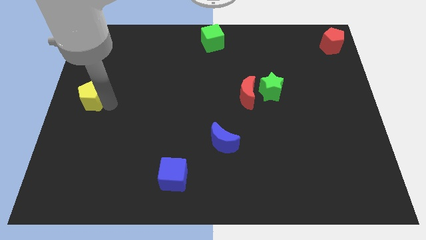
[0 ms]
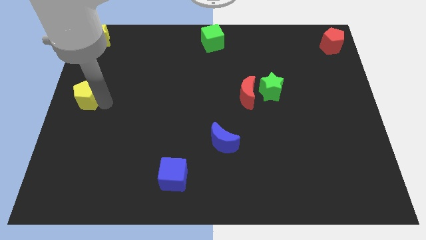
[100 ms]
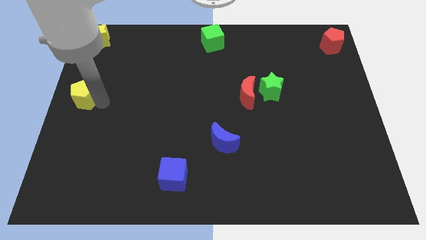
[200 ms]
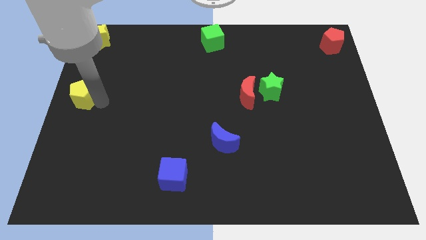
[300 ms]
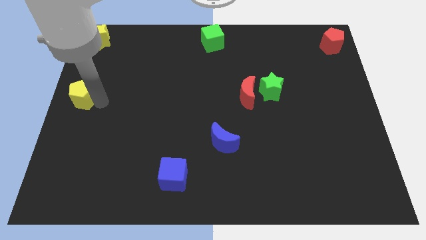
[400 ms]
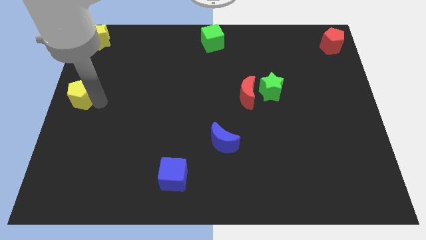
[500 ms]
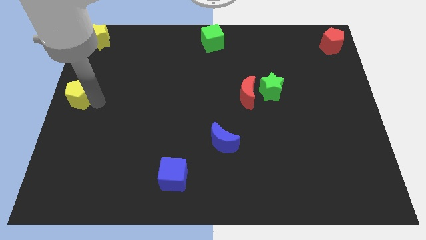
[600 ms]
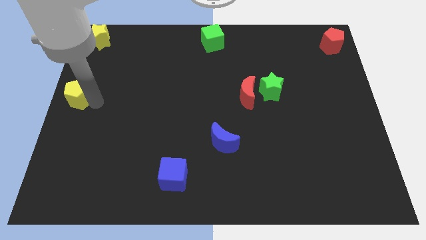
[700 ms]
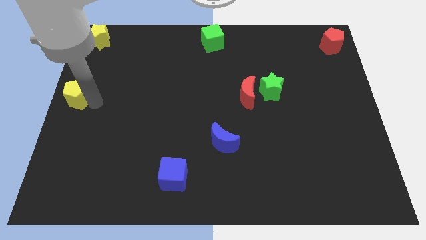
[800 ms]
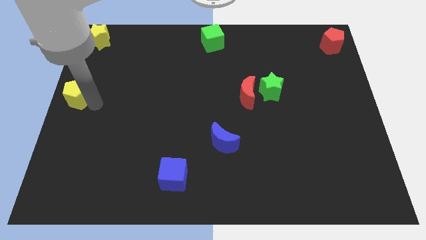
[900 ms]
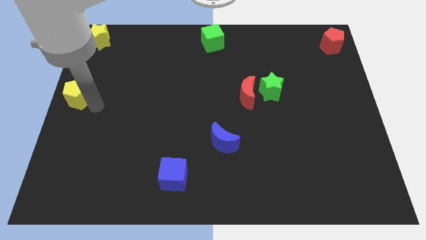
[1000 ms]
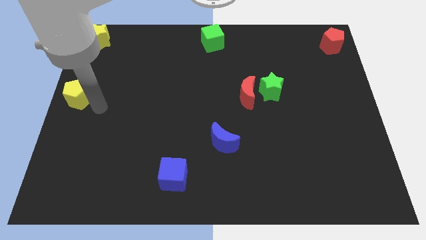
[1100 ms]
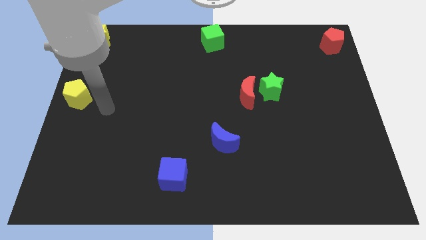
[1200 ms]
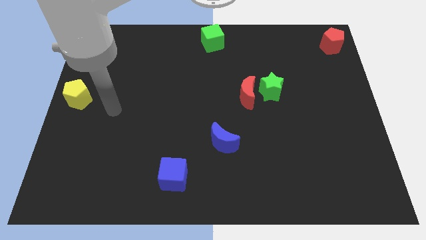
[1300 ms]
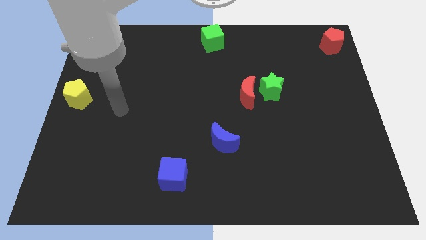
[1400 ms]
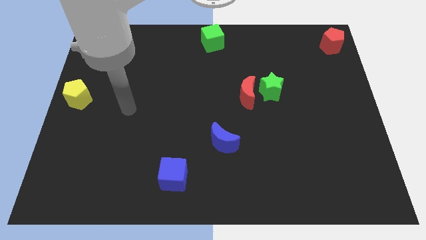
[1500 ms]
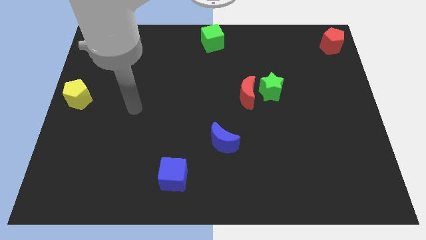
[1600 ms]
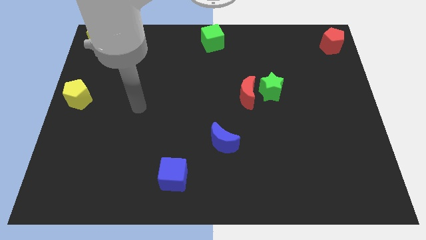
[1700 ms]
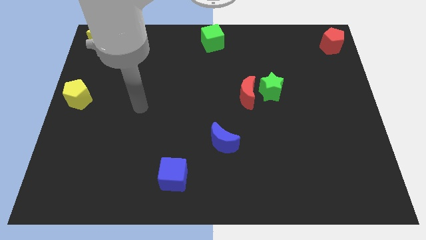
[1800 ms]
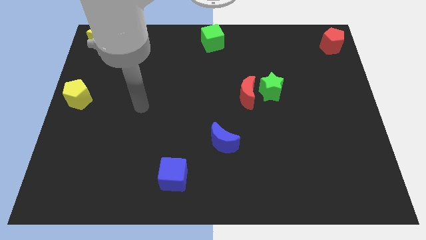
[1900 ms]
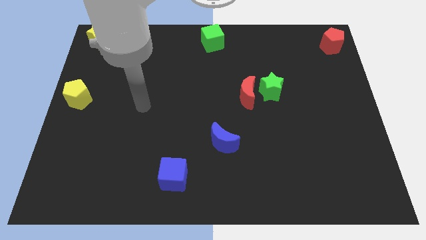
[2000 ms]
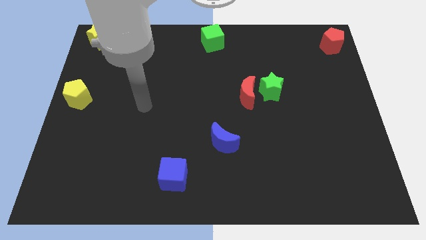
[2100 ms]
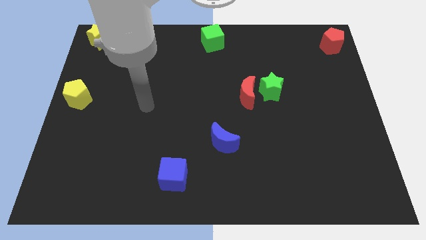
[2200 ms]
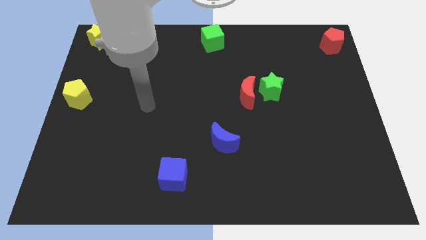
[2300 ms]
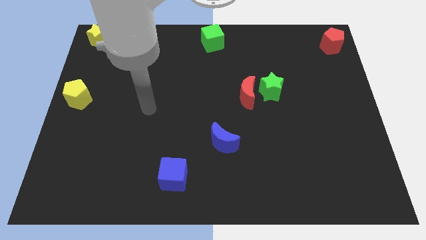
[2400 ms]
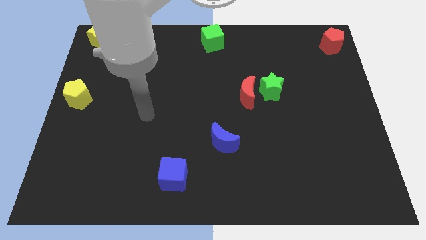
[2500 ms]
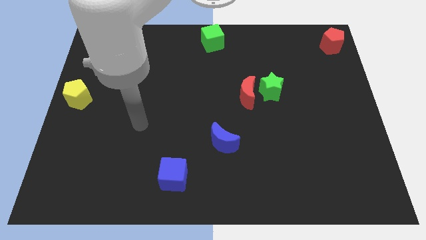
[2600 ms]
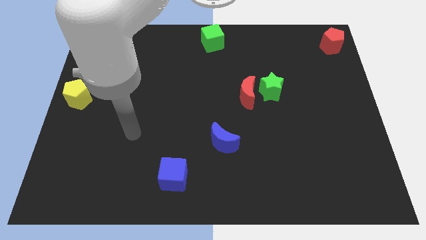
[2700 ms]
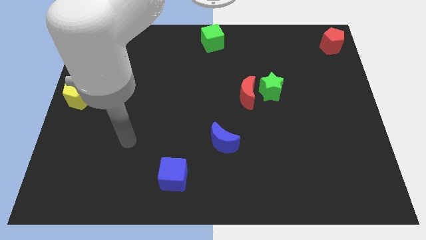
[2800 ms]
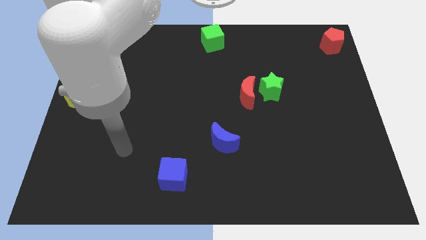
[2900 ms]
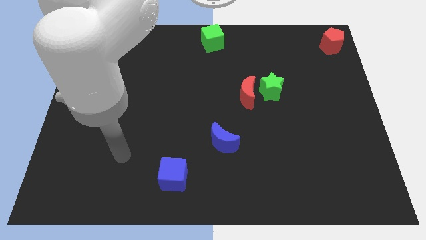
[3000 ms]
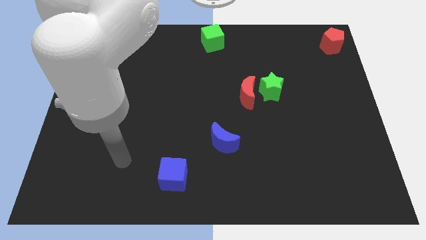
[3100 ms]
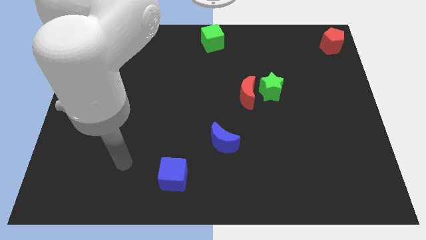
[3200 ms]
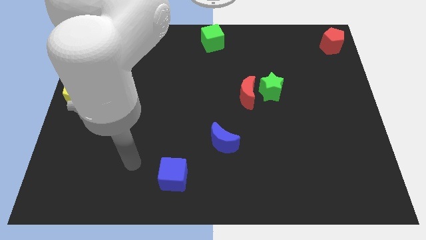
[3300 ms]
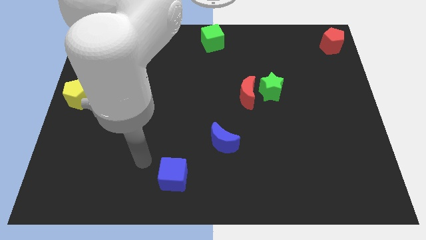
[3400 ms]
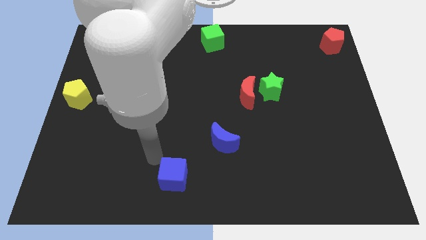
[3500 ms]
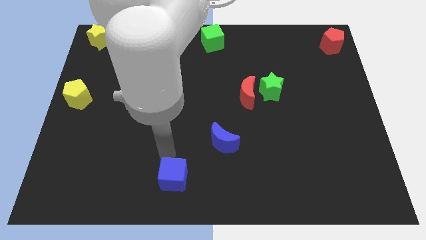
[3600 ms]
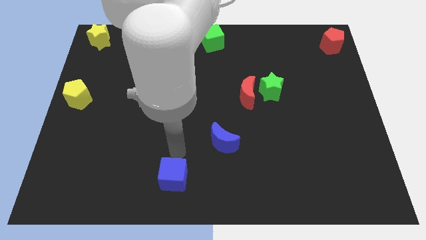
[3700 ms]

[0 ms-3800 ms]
move your arm to the top of blue cube

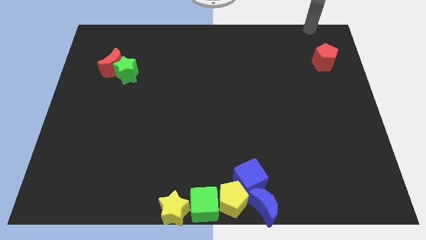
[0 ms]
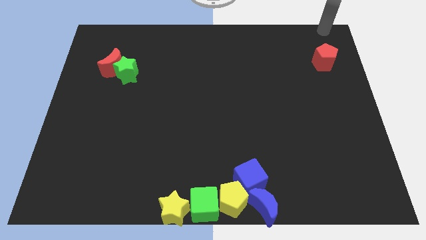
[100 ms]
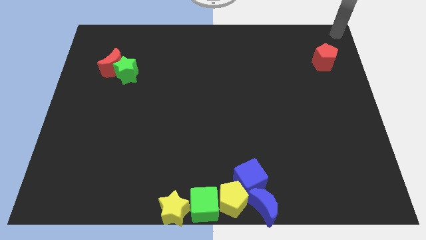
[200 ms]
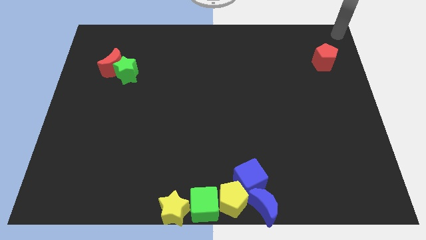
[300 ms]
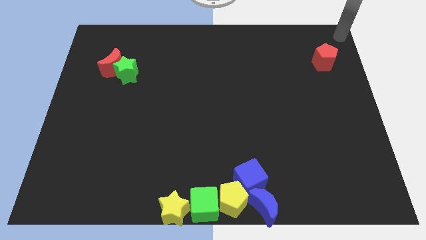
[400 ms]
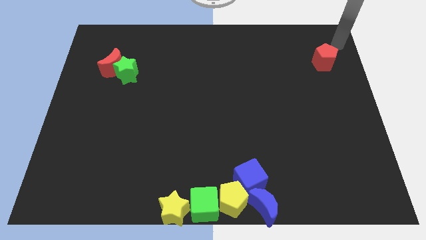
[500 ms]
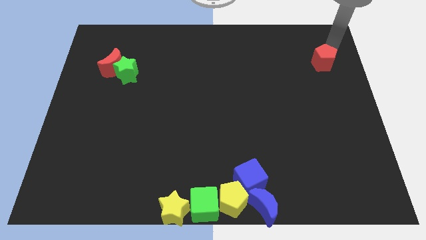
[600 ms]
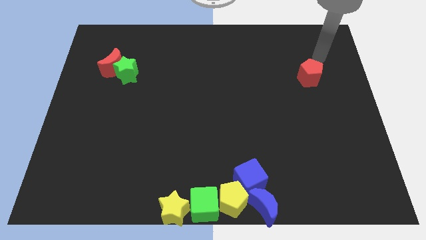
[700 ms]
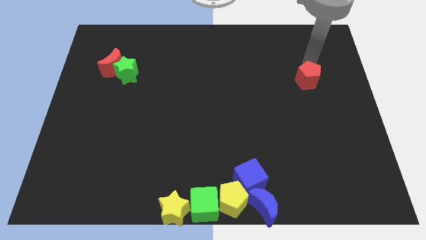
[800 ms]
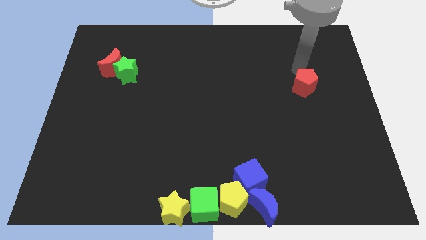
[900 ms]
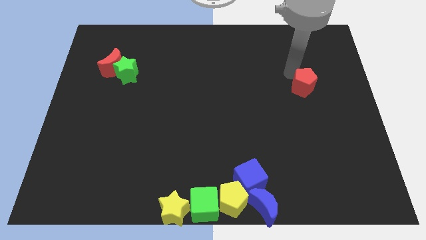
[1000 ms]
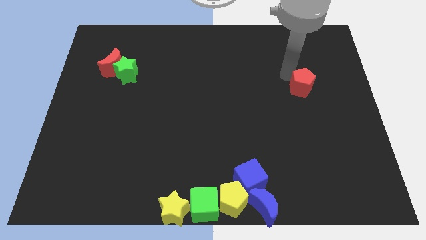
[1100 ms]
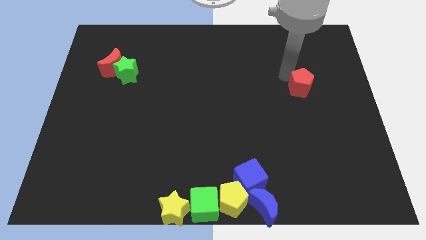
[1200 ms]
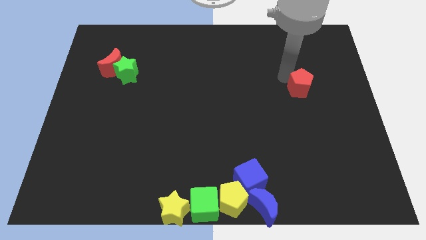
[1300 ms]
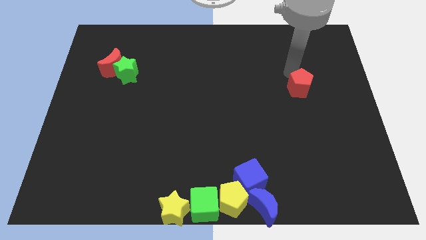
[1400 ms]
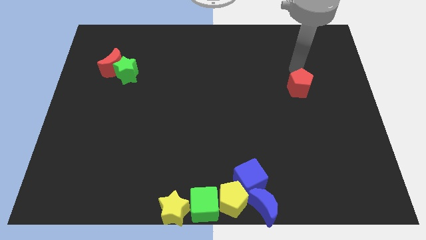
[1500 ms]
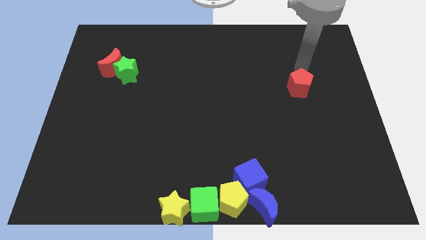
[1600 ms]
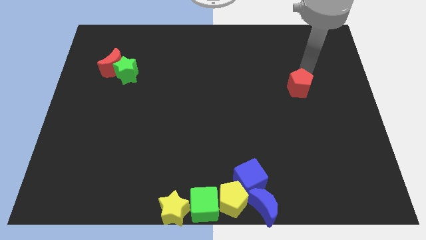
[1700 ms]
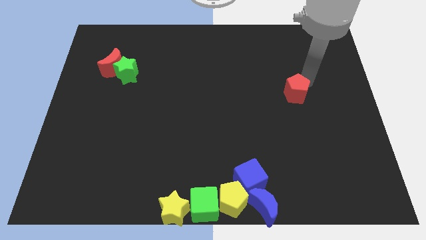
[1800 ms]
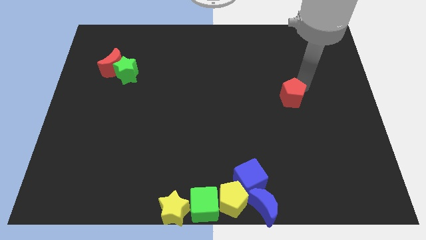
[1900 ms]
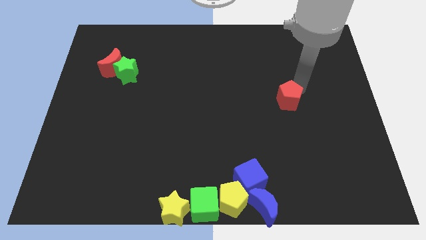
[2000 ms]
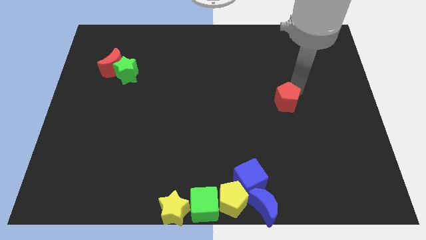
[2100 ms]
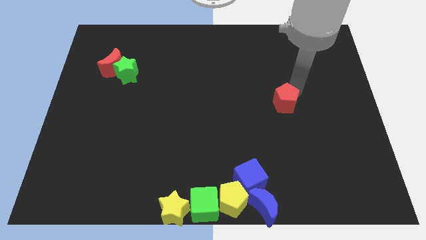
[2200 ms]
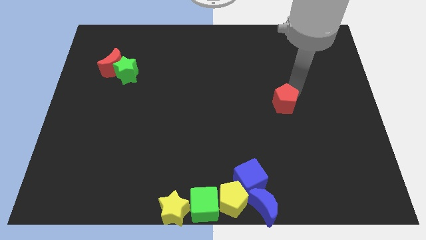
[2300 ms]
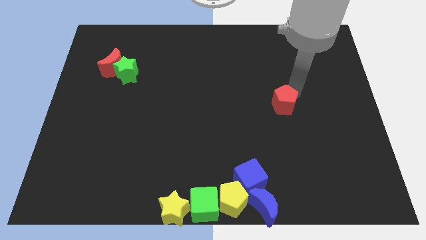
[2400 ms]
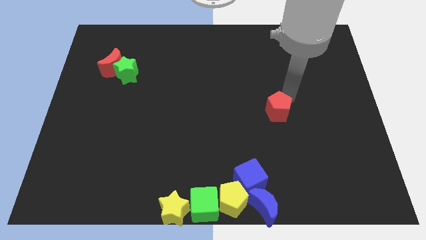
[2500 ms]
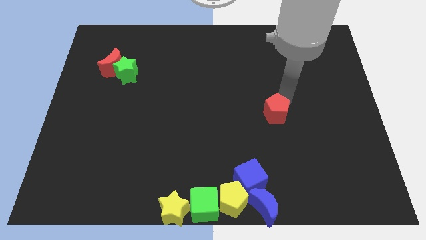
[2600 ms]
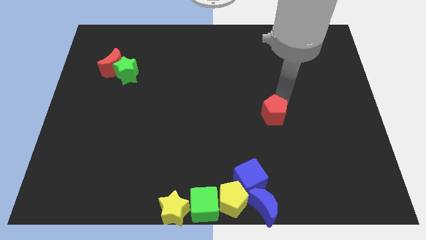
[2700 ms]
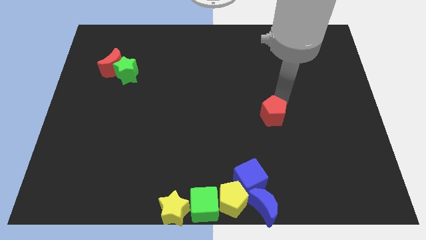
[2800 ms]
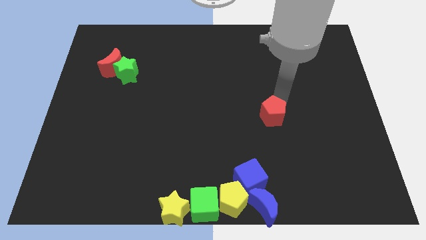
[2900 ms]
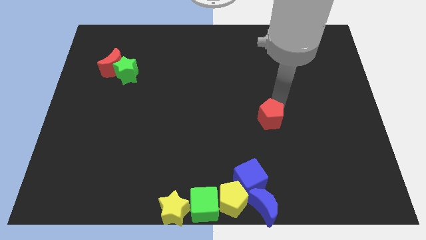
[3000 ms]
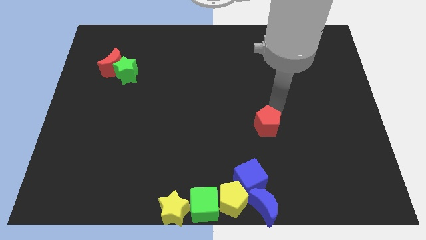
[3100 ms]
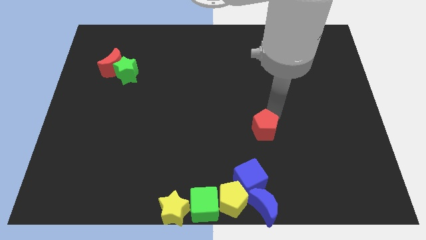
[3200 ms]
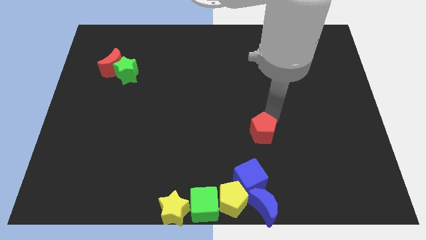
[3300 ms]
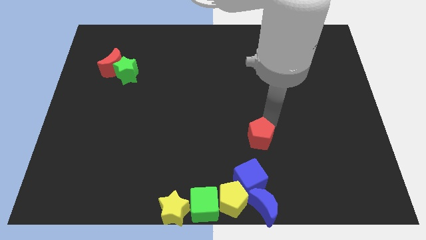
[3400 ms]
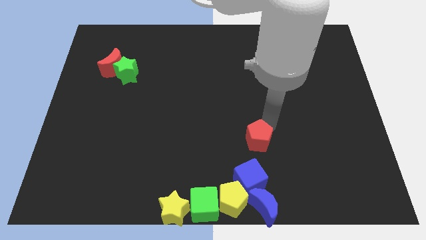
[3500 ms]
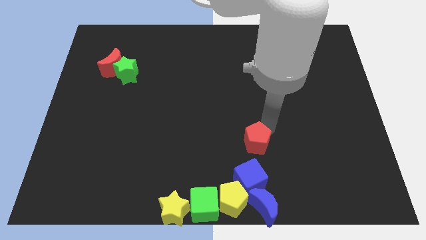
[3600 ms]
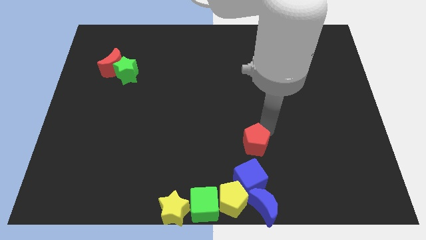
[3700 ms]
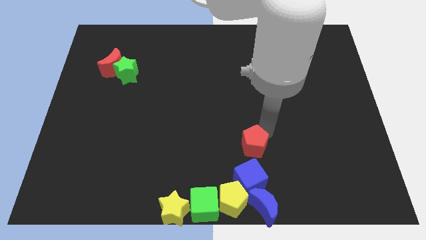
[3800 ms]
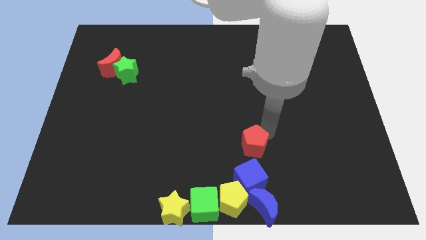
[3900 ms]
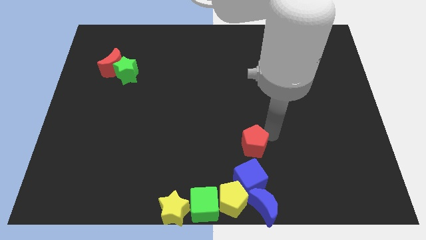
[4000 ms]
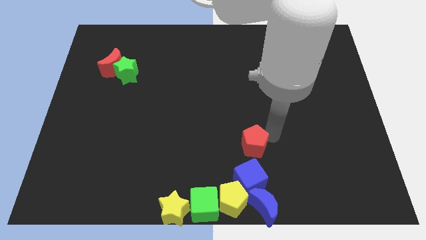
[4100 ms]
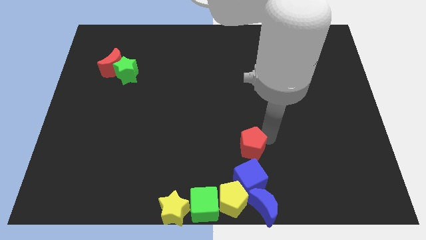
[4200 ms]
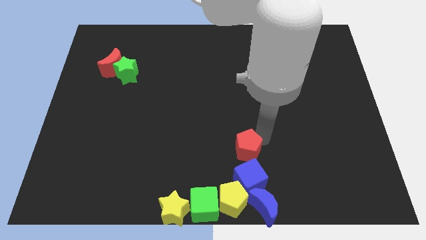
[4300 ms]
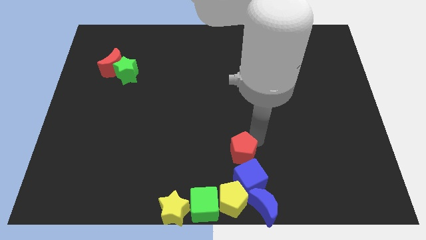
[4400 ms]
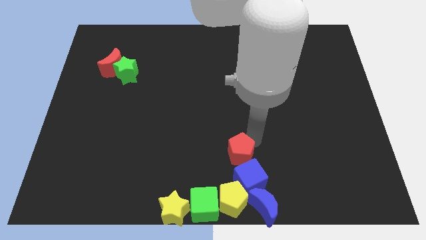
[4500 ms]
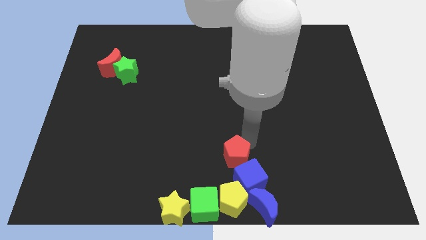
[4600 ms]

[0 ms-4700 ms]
move red pentagon towards the blue cube

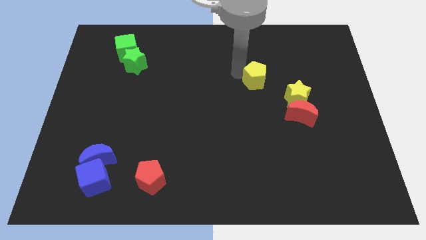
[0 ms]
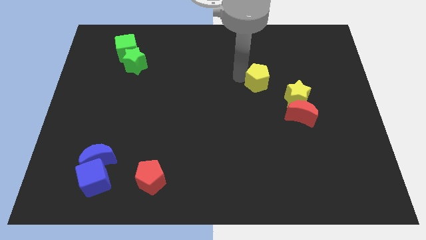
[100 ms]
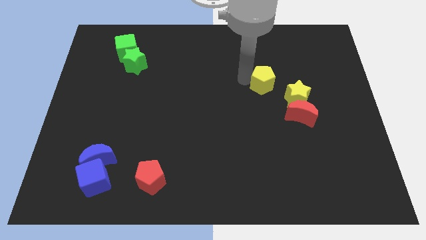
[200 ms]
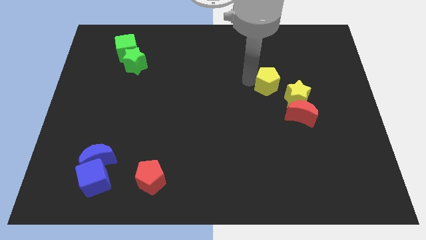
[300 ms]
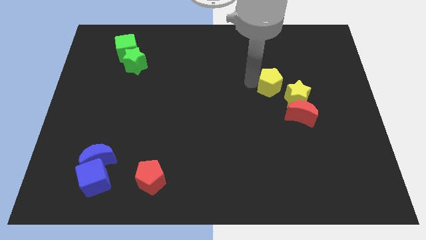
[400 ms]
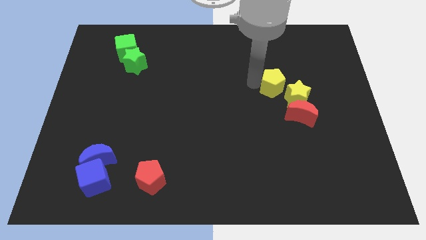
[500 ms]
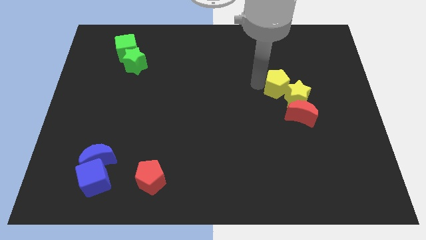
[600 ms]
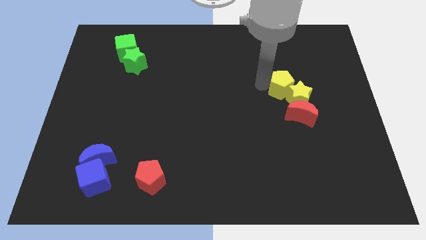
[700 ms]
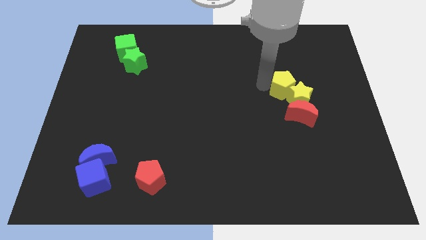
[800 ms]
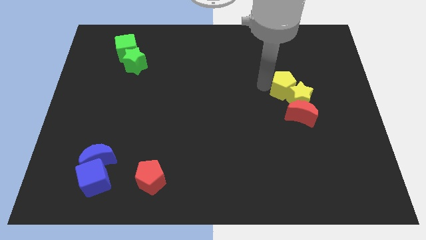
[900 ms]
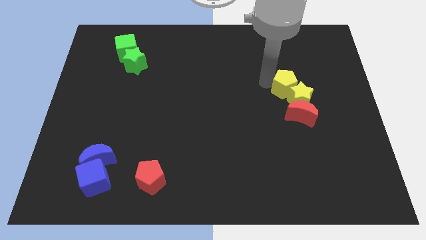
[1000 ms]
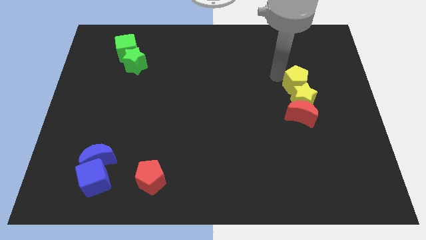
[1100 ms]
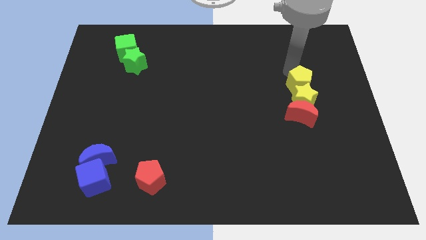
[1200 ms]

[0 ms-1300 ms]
push the yellow pentagon into the yellow star
